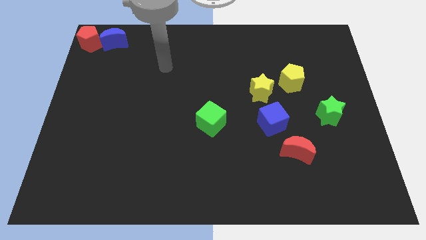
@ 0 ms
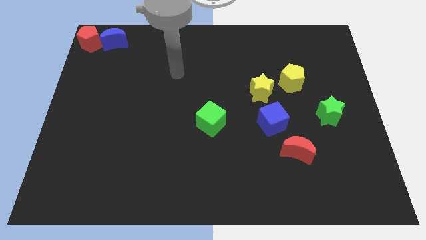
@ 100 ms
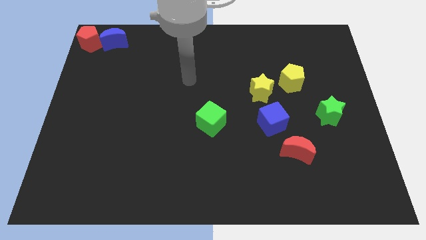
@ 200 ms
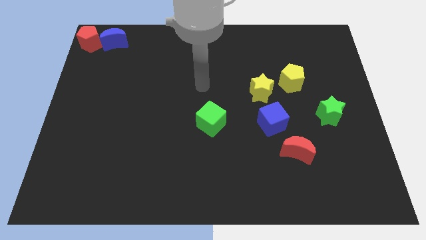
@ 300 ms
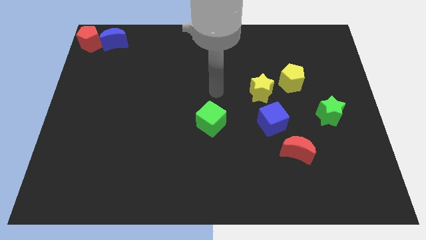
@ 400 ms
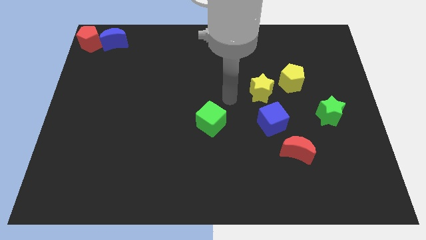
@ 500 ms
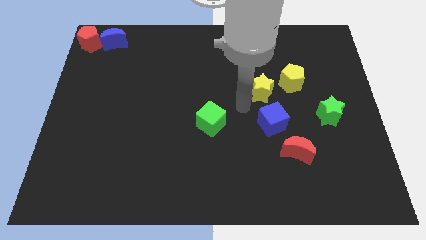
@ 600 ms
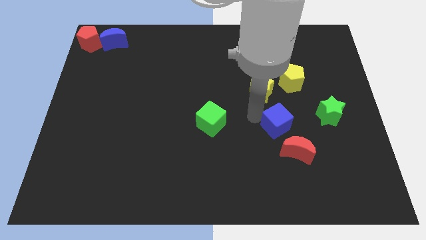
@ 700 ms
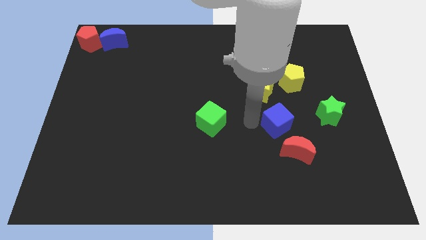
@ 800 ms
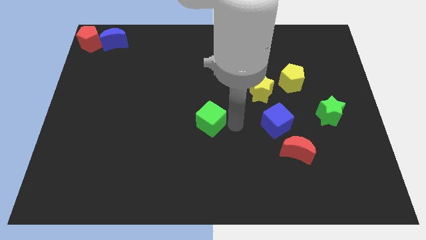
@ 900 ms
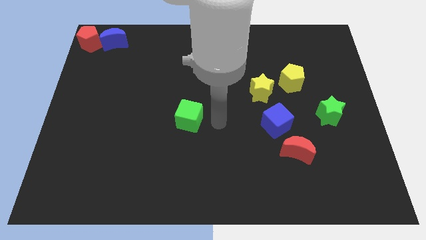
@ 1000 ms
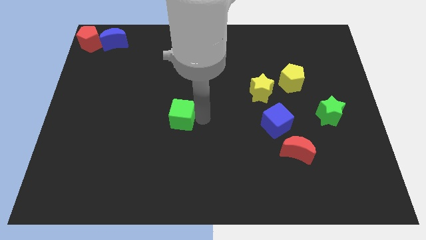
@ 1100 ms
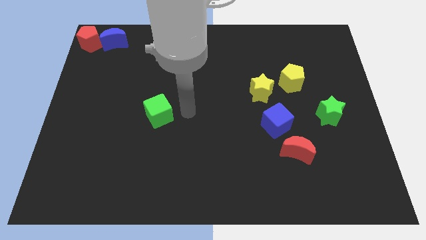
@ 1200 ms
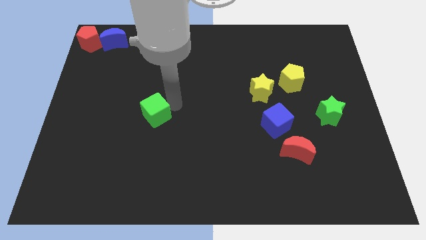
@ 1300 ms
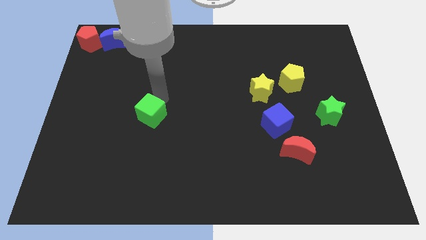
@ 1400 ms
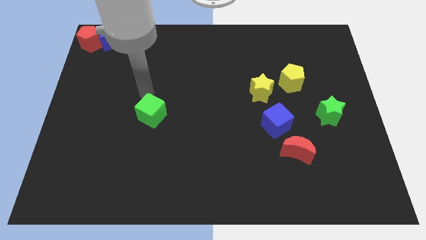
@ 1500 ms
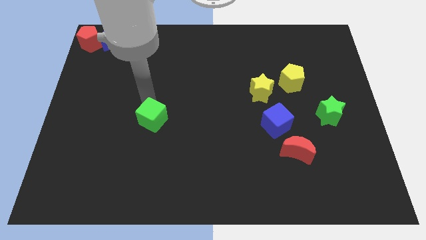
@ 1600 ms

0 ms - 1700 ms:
slightly move the green cube towards the left of the board

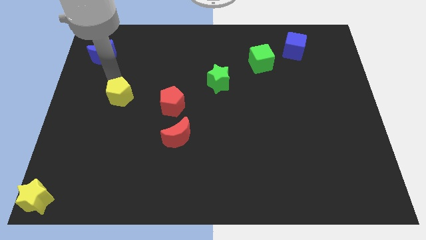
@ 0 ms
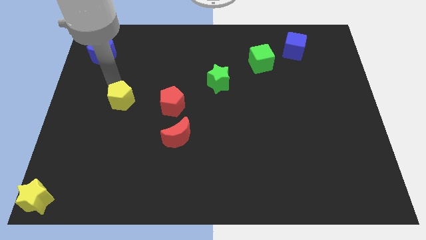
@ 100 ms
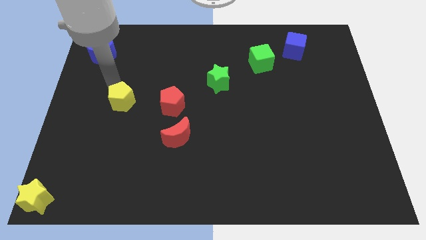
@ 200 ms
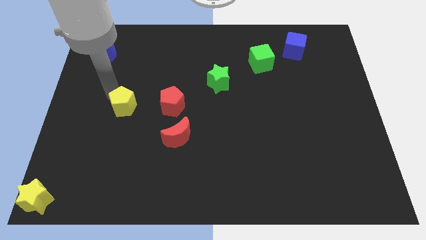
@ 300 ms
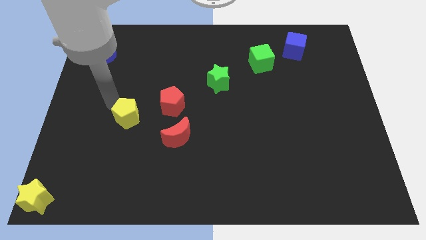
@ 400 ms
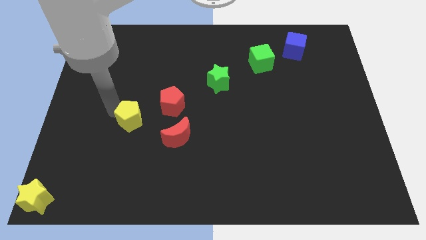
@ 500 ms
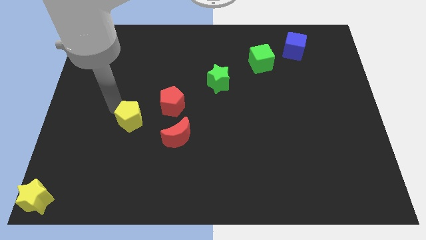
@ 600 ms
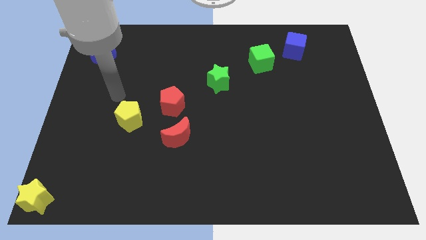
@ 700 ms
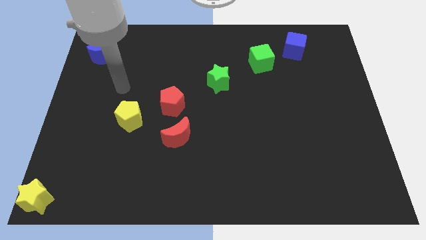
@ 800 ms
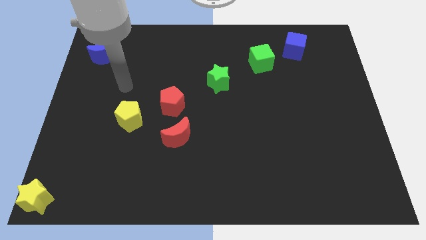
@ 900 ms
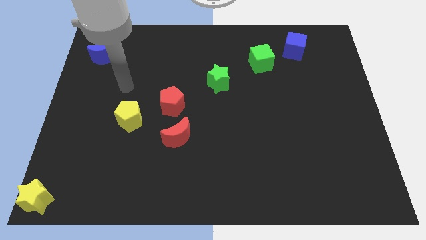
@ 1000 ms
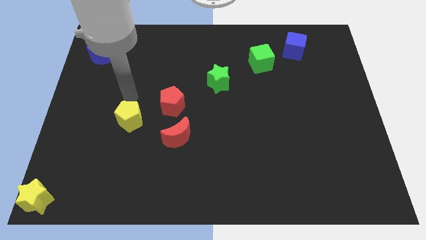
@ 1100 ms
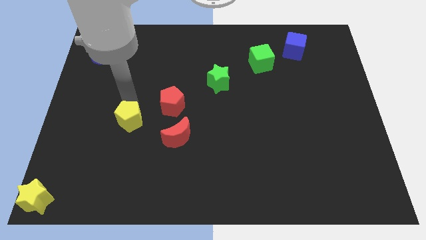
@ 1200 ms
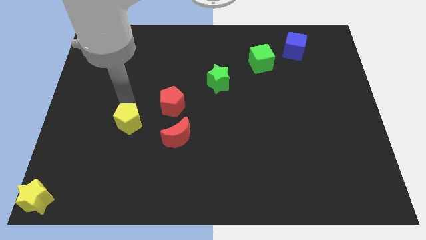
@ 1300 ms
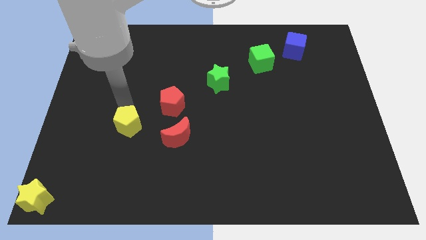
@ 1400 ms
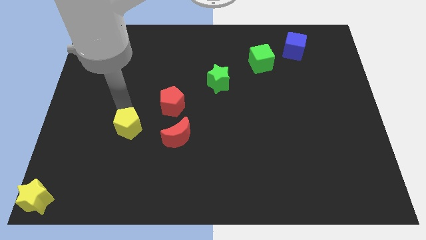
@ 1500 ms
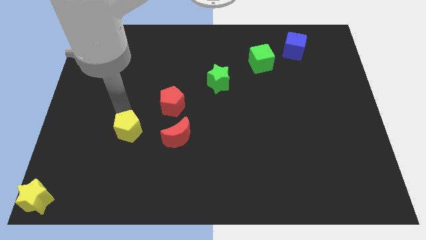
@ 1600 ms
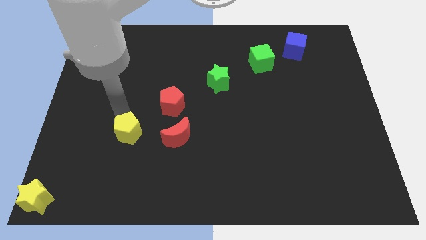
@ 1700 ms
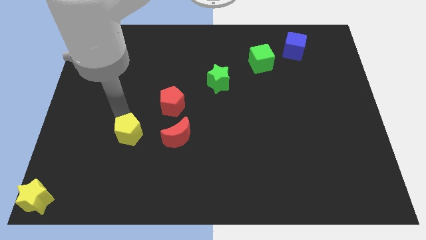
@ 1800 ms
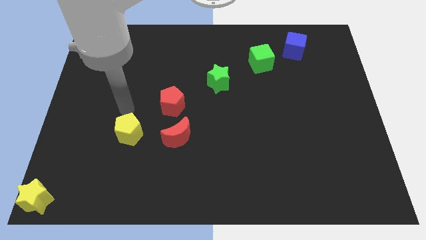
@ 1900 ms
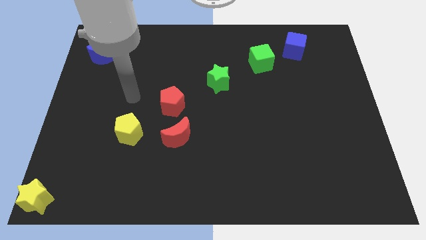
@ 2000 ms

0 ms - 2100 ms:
make a triangle out of yellow pentagon and red blocks

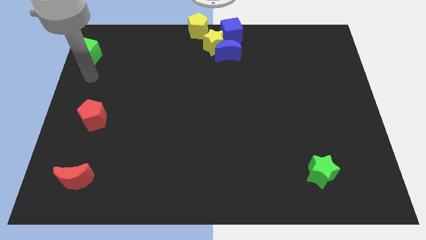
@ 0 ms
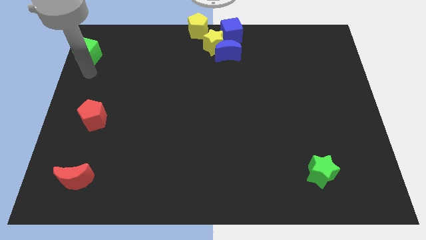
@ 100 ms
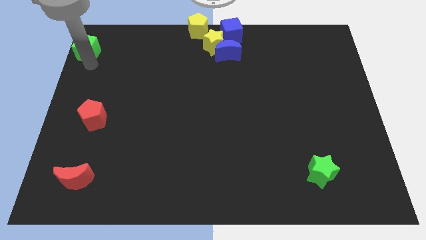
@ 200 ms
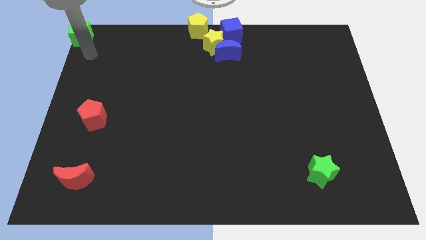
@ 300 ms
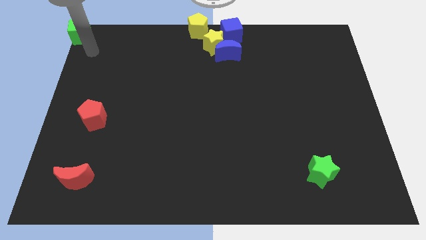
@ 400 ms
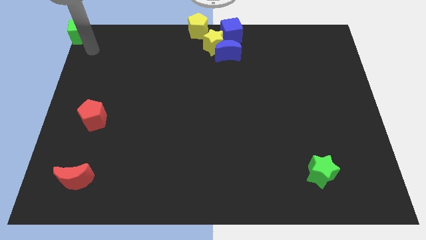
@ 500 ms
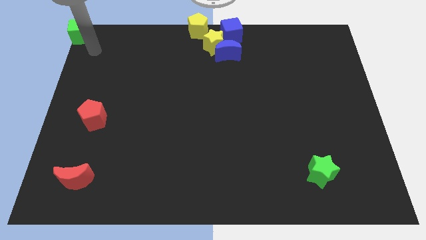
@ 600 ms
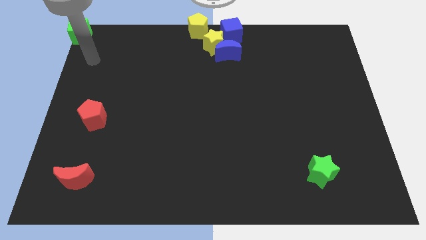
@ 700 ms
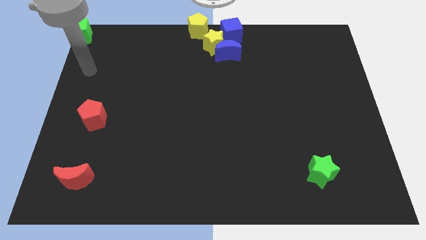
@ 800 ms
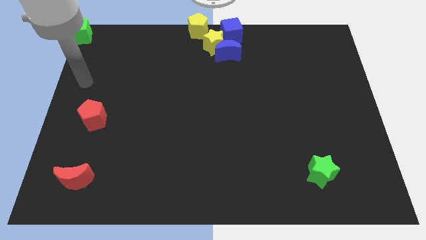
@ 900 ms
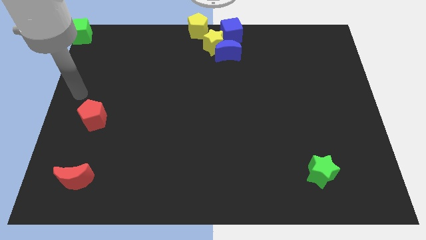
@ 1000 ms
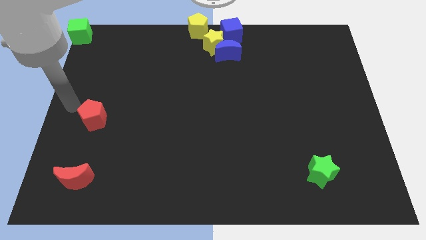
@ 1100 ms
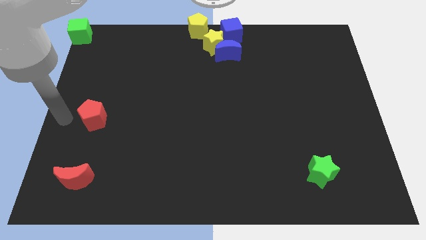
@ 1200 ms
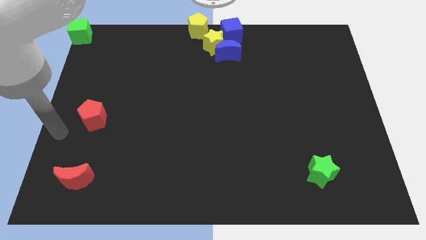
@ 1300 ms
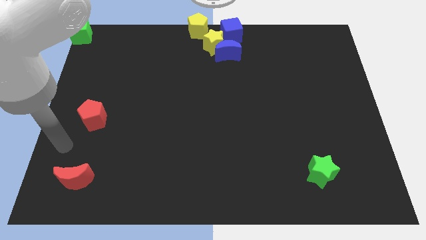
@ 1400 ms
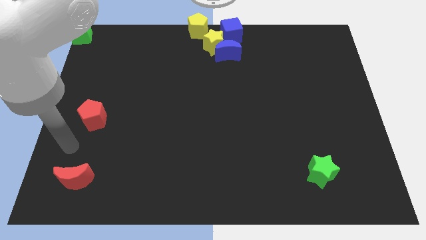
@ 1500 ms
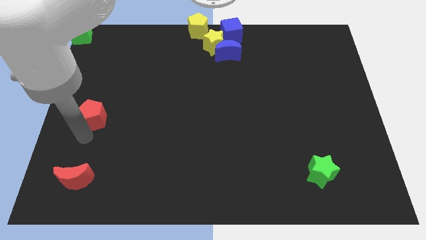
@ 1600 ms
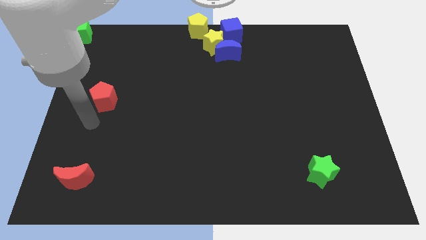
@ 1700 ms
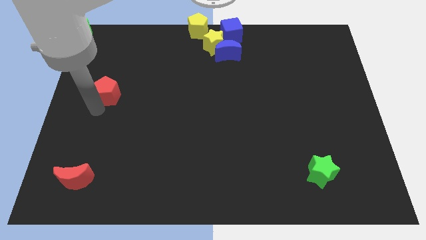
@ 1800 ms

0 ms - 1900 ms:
move the red pentagon towards top center side

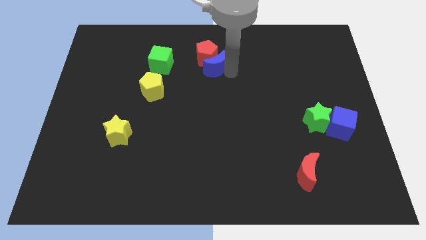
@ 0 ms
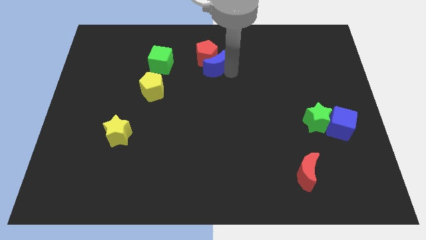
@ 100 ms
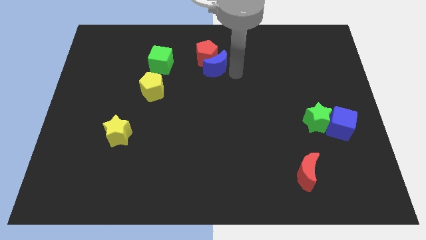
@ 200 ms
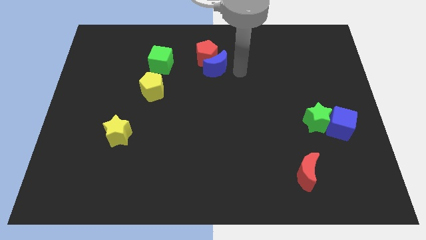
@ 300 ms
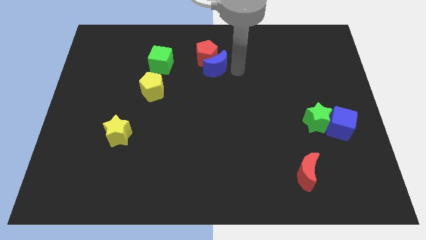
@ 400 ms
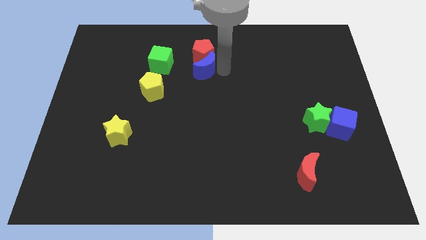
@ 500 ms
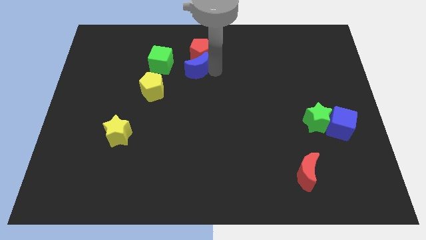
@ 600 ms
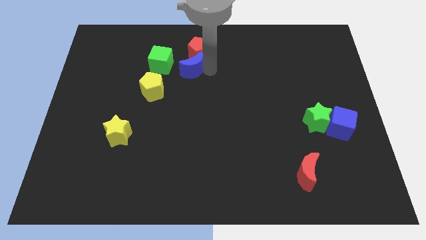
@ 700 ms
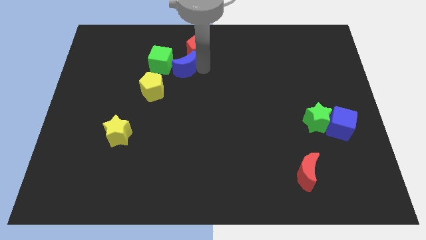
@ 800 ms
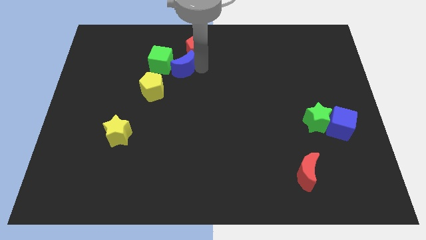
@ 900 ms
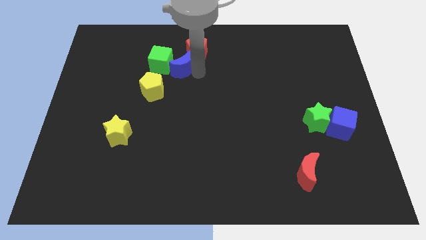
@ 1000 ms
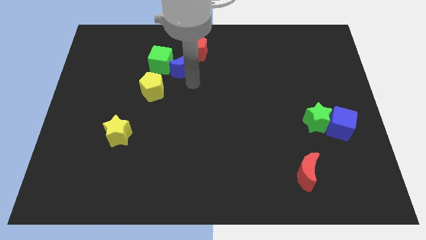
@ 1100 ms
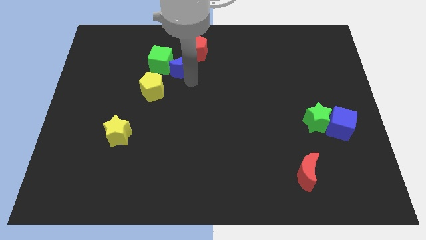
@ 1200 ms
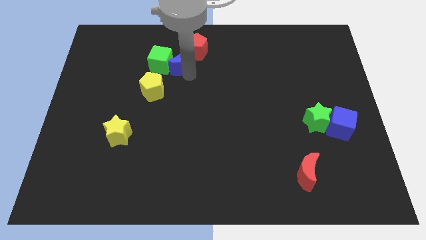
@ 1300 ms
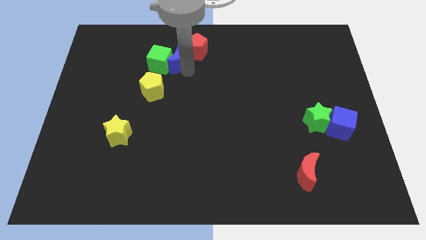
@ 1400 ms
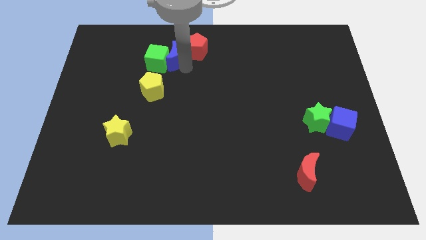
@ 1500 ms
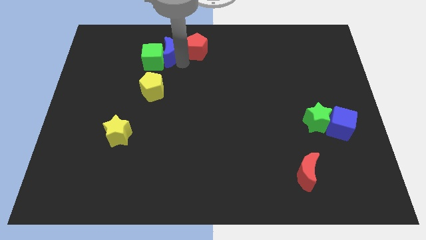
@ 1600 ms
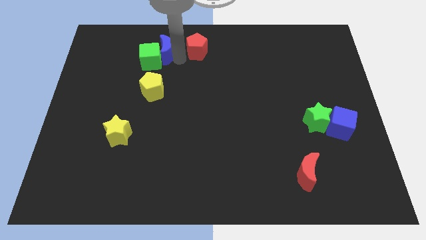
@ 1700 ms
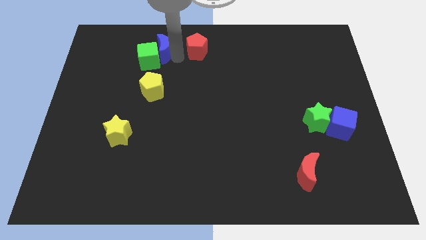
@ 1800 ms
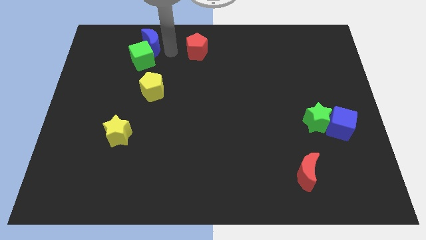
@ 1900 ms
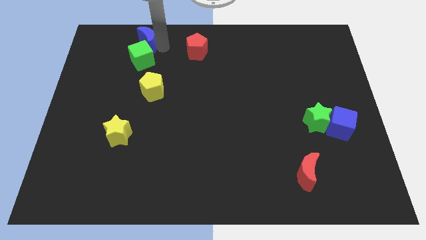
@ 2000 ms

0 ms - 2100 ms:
push the blue crescent into the green cube

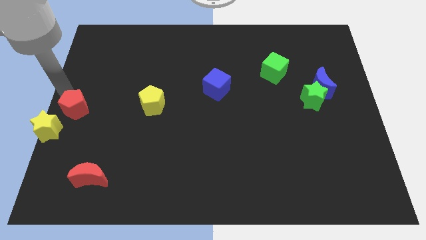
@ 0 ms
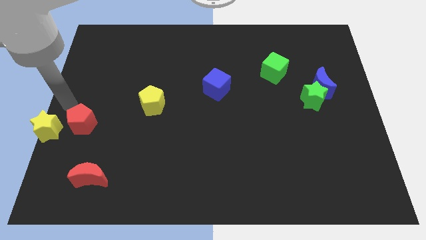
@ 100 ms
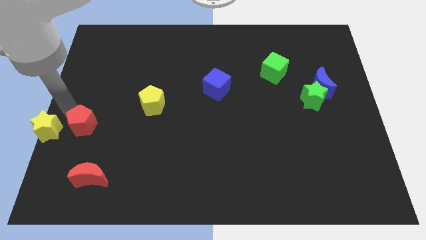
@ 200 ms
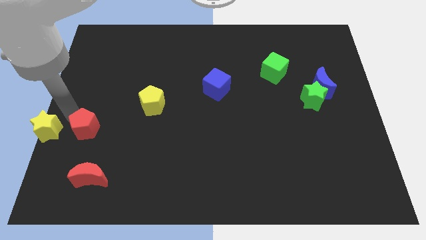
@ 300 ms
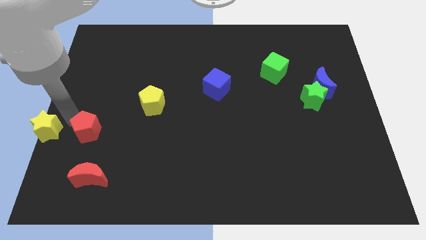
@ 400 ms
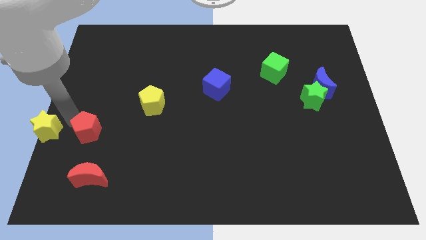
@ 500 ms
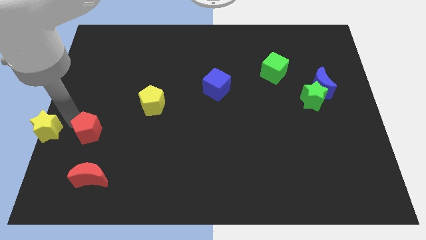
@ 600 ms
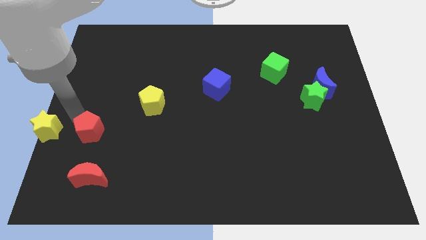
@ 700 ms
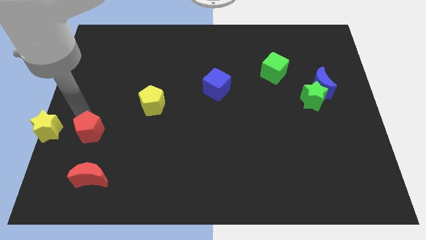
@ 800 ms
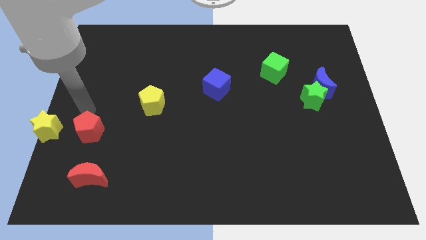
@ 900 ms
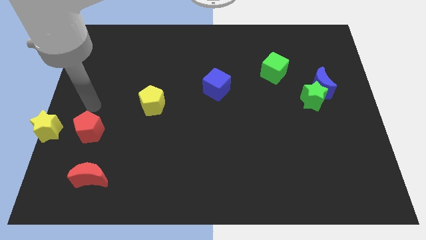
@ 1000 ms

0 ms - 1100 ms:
push red pentagon slightly upwards

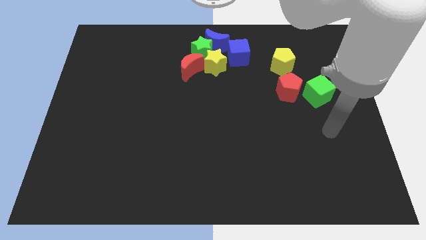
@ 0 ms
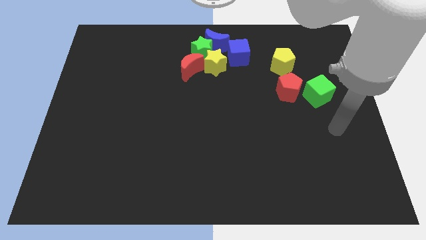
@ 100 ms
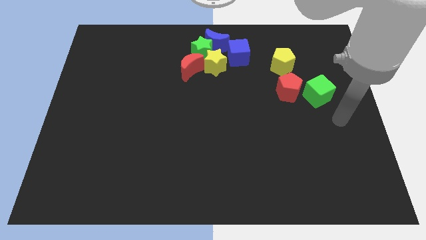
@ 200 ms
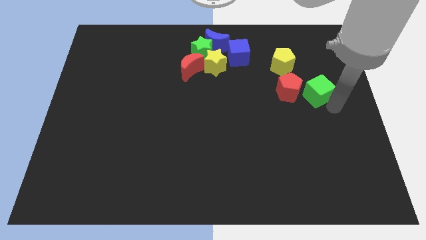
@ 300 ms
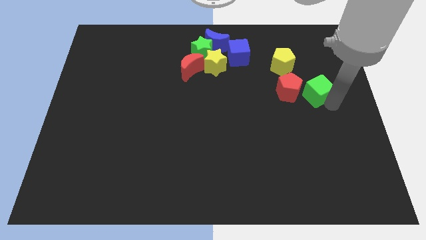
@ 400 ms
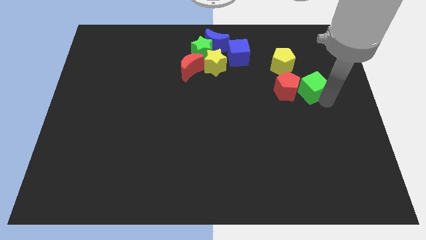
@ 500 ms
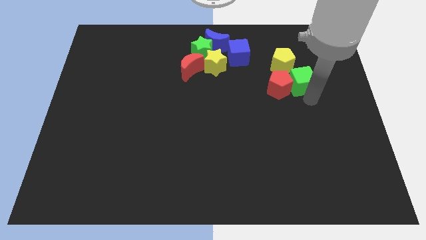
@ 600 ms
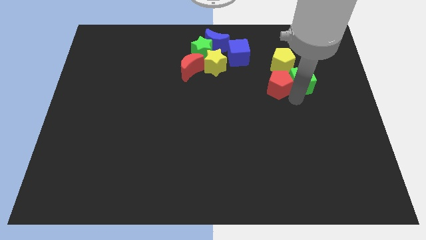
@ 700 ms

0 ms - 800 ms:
move the green cube to the right of the red pentagon
